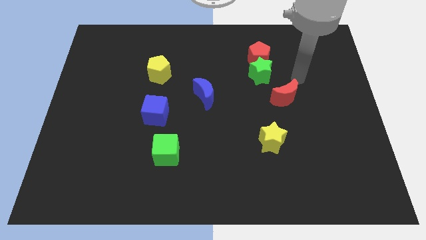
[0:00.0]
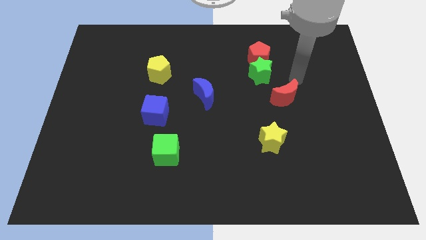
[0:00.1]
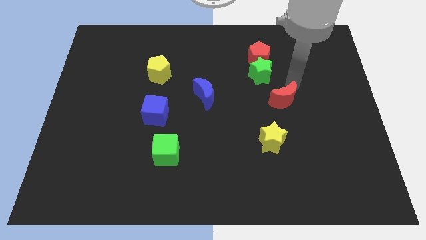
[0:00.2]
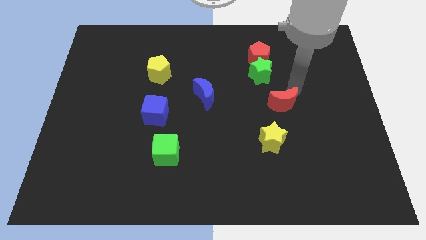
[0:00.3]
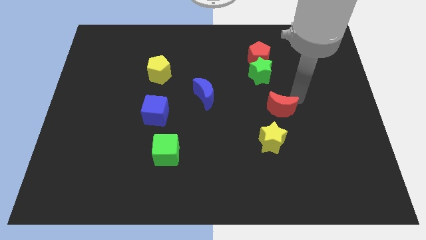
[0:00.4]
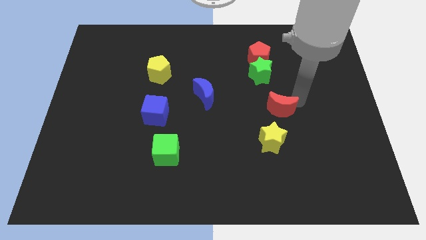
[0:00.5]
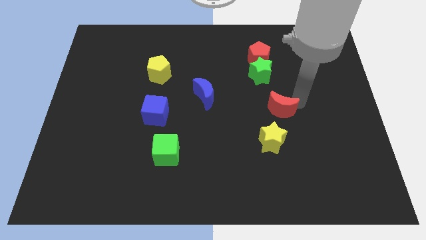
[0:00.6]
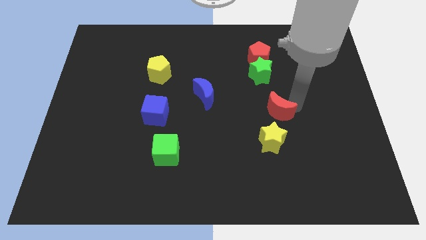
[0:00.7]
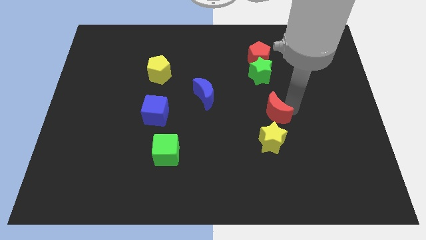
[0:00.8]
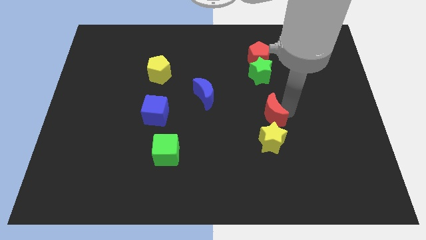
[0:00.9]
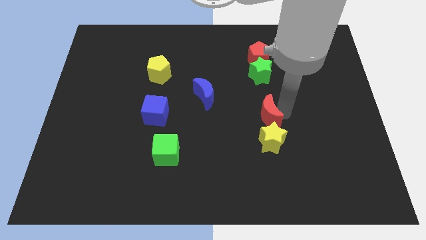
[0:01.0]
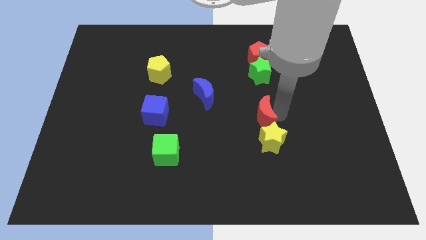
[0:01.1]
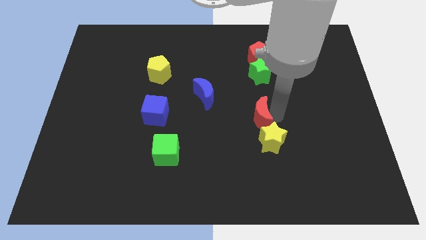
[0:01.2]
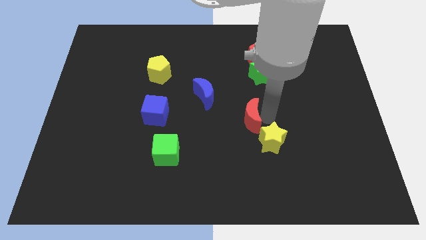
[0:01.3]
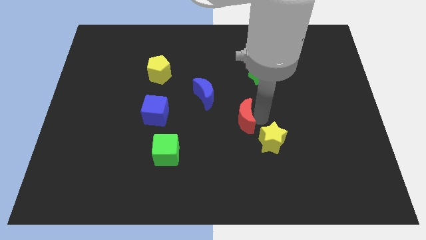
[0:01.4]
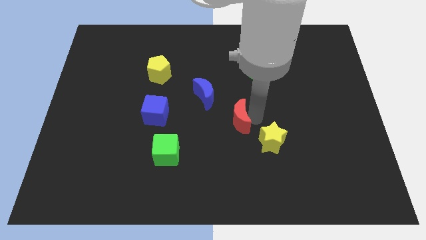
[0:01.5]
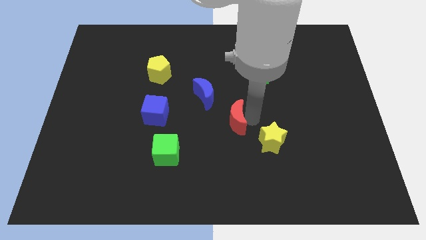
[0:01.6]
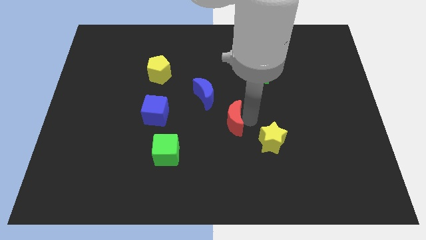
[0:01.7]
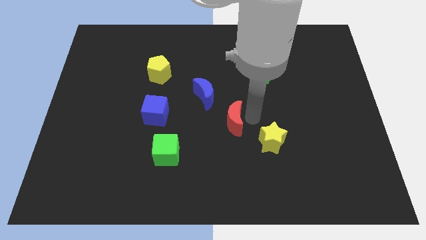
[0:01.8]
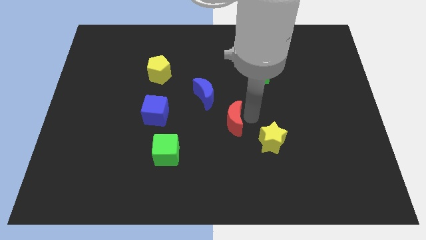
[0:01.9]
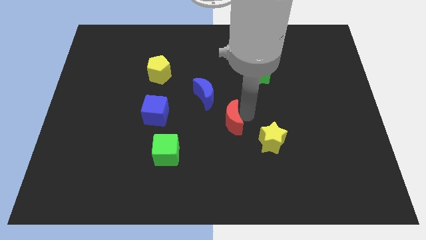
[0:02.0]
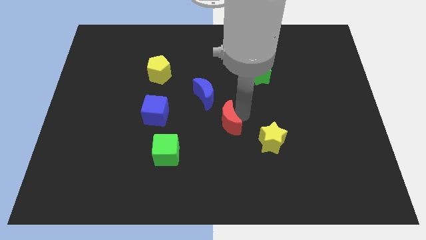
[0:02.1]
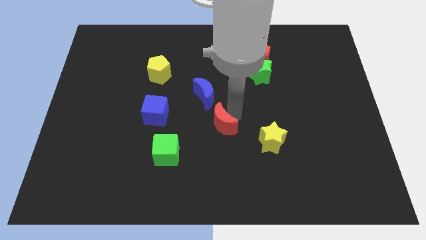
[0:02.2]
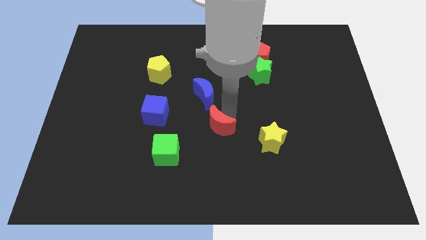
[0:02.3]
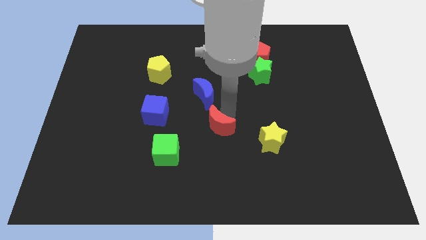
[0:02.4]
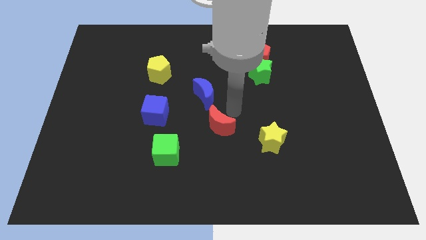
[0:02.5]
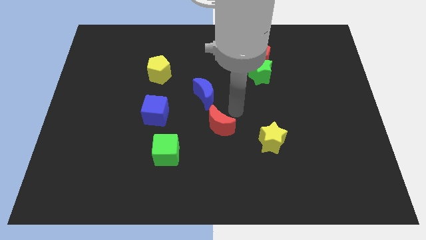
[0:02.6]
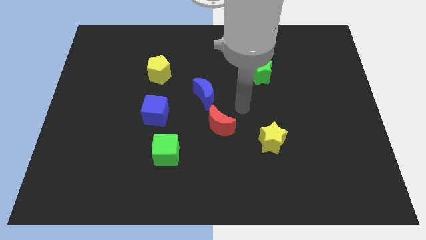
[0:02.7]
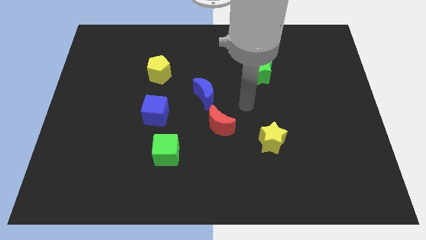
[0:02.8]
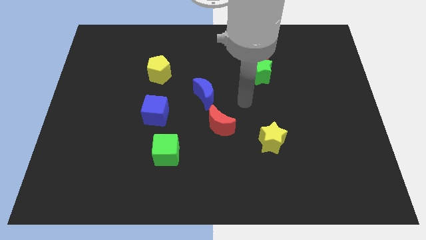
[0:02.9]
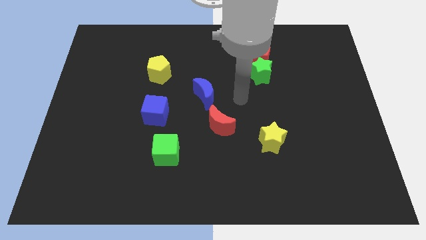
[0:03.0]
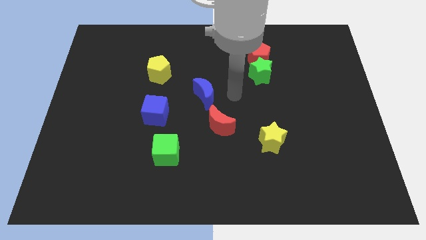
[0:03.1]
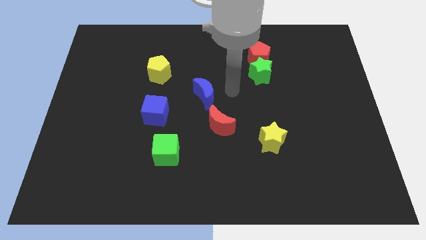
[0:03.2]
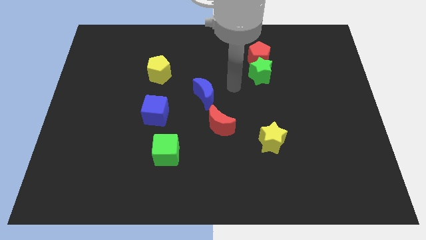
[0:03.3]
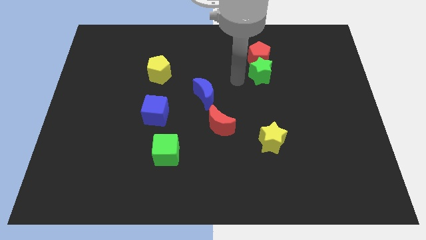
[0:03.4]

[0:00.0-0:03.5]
move the red crescent to the center of the board

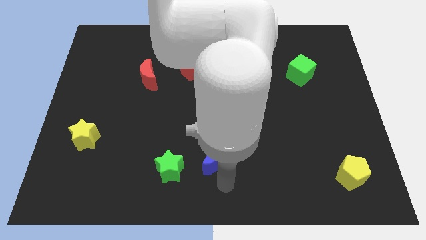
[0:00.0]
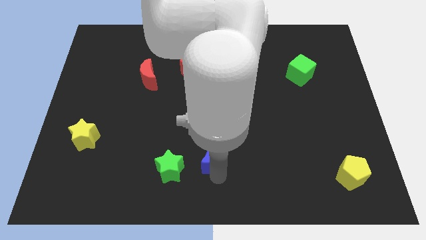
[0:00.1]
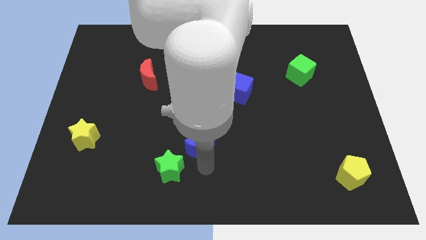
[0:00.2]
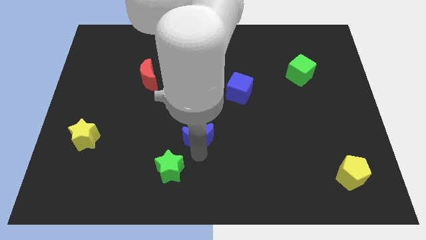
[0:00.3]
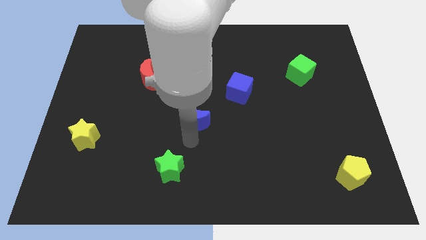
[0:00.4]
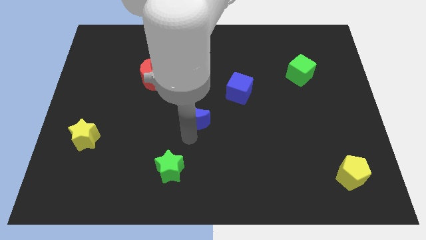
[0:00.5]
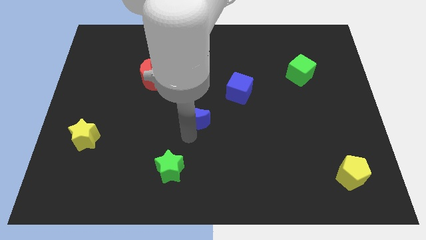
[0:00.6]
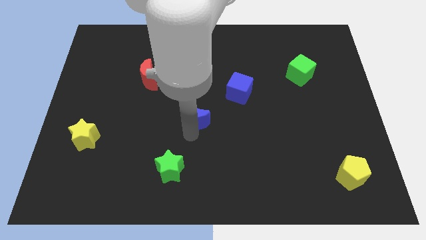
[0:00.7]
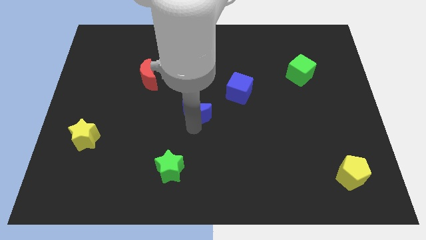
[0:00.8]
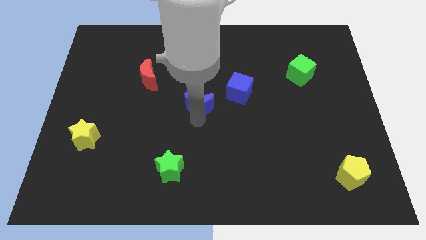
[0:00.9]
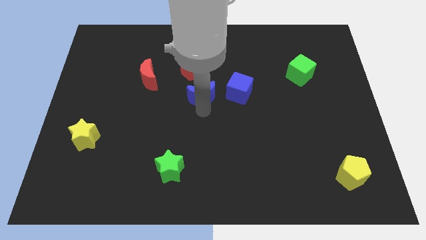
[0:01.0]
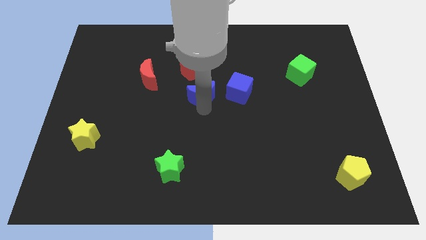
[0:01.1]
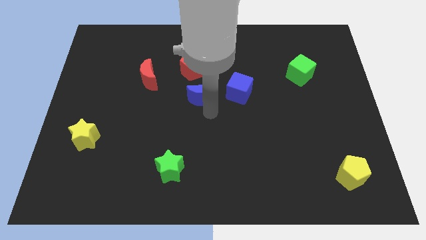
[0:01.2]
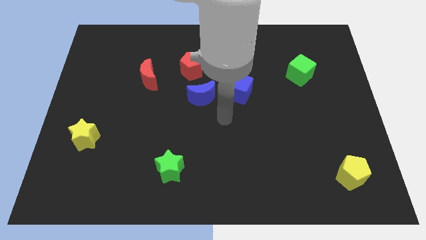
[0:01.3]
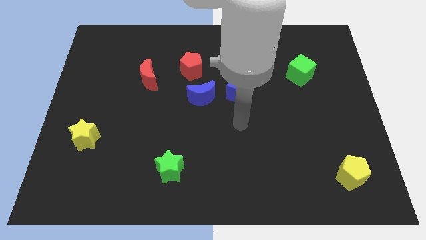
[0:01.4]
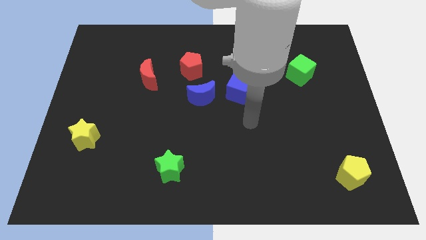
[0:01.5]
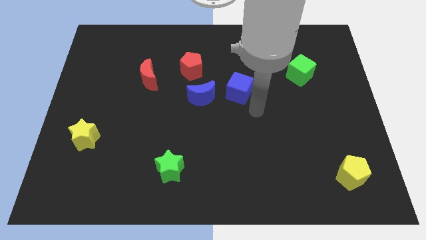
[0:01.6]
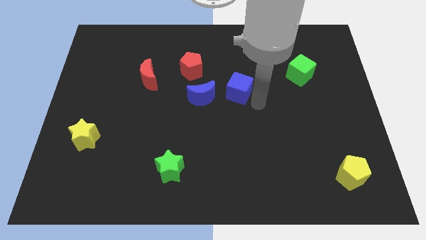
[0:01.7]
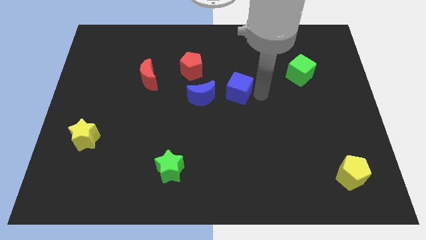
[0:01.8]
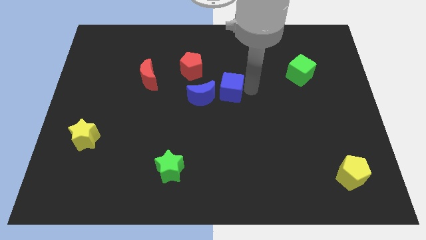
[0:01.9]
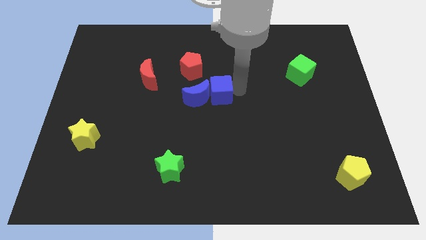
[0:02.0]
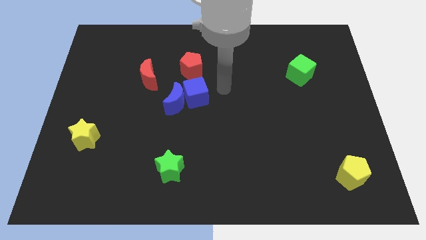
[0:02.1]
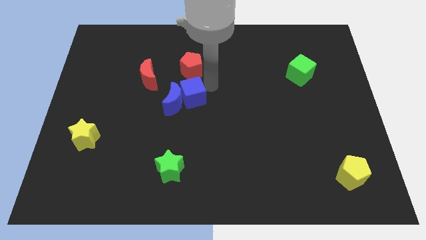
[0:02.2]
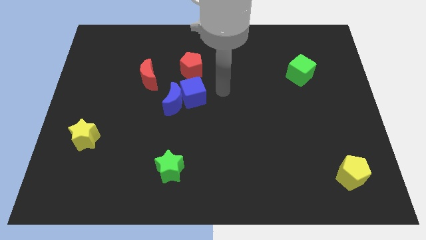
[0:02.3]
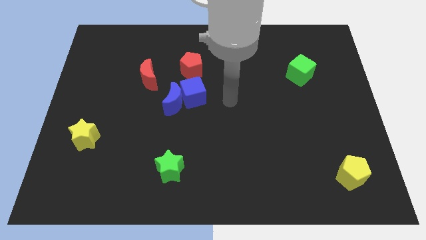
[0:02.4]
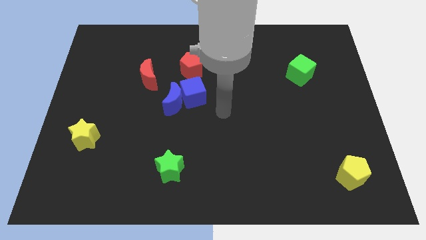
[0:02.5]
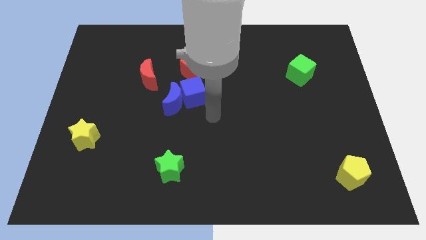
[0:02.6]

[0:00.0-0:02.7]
place blue blocks below red pentagon

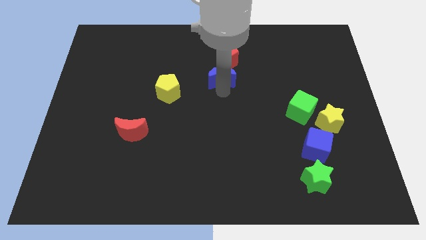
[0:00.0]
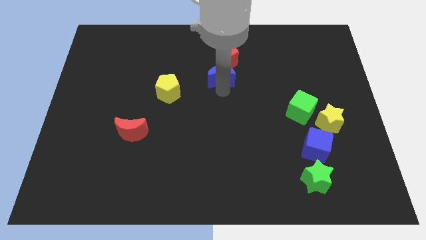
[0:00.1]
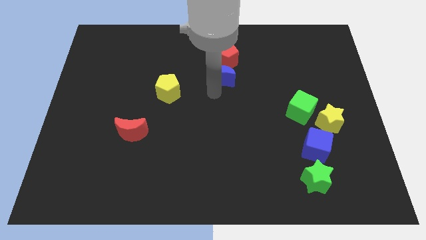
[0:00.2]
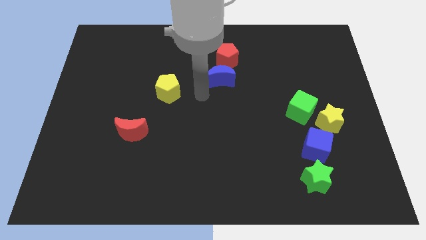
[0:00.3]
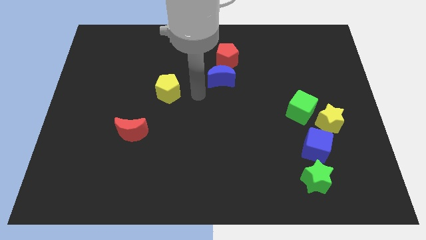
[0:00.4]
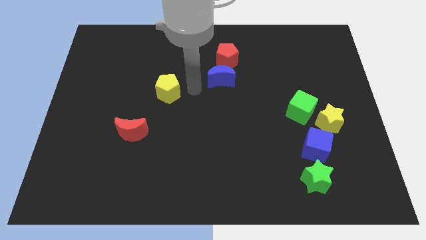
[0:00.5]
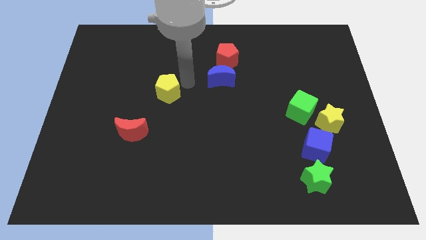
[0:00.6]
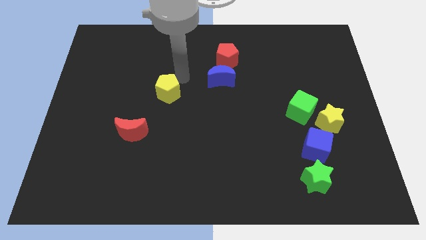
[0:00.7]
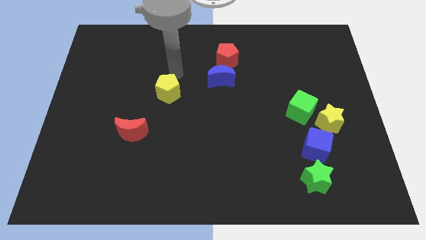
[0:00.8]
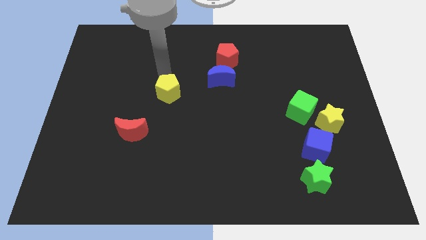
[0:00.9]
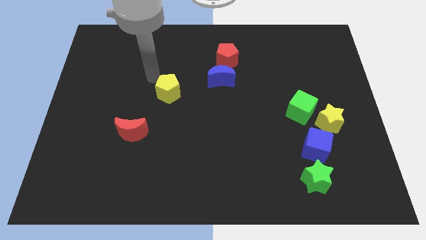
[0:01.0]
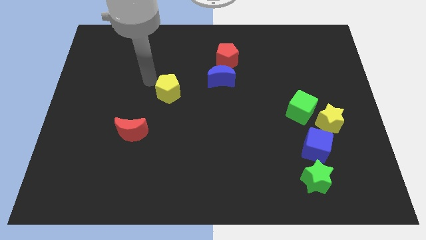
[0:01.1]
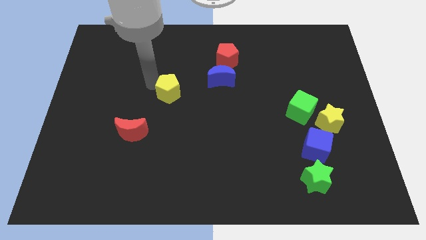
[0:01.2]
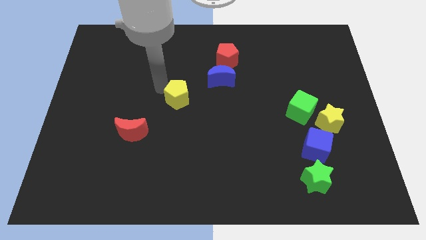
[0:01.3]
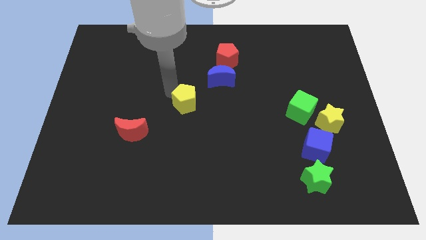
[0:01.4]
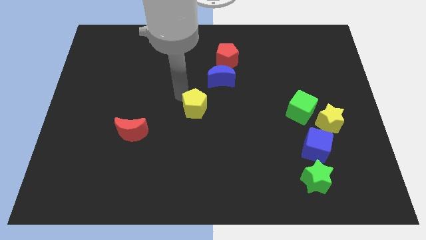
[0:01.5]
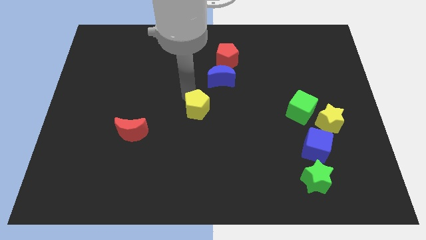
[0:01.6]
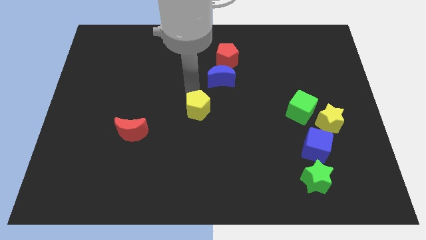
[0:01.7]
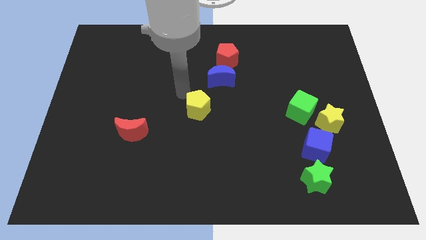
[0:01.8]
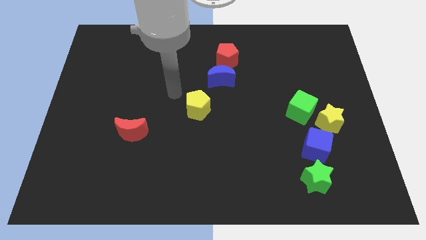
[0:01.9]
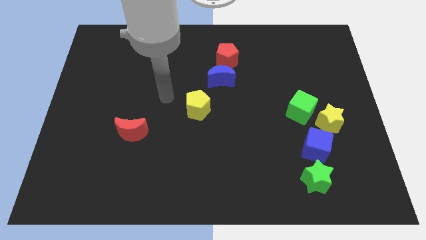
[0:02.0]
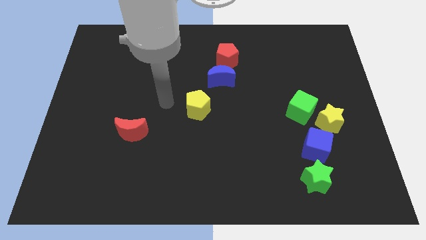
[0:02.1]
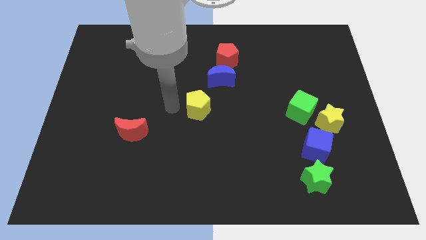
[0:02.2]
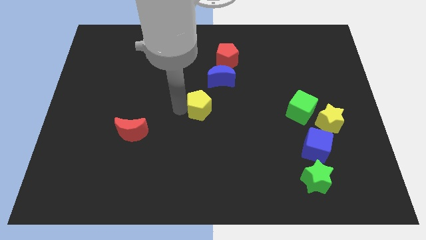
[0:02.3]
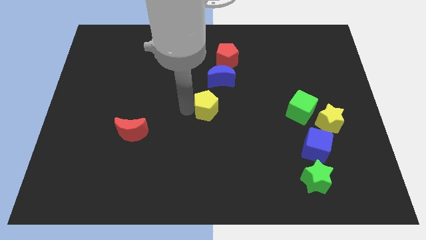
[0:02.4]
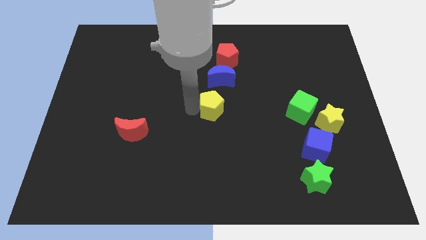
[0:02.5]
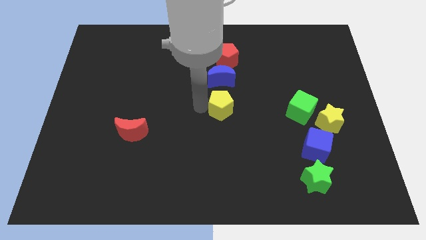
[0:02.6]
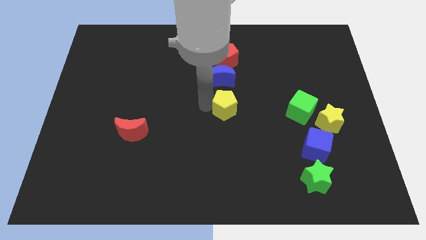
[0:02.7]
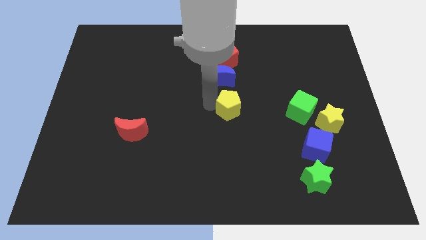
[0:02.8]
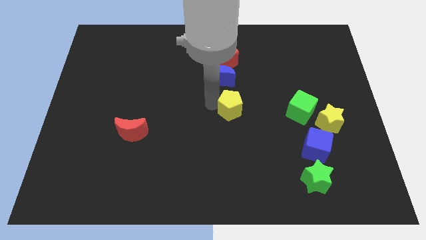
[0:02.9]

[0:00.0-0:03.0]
place yellow pentagon to the center of the board
